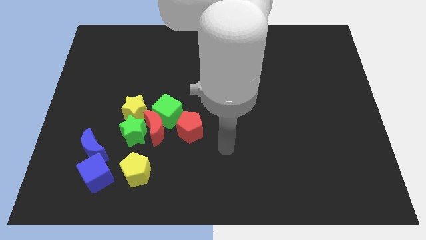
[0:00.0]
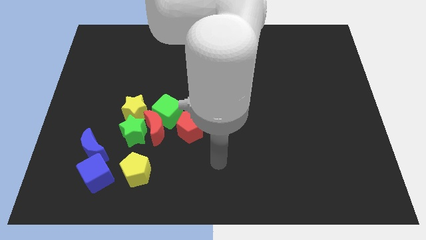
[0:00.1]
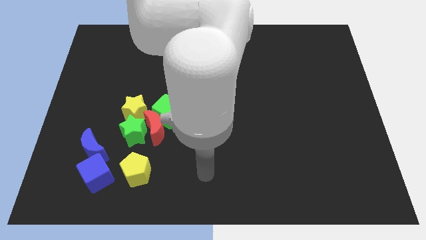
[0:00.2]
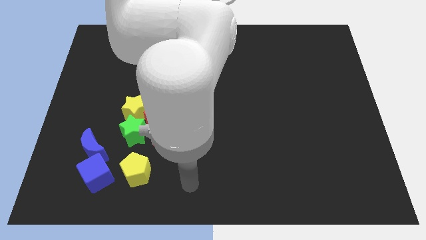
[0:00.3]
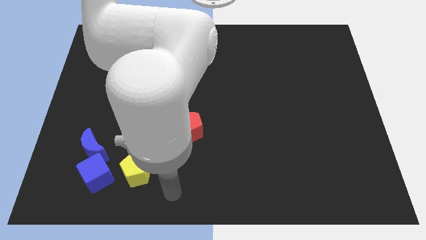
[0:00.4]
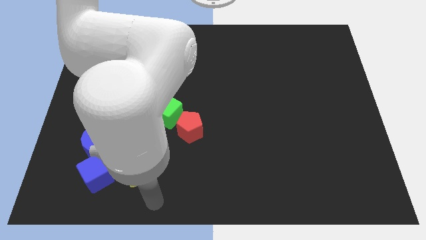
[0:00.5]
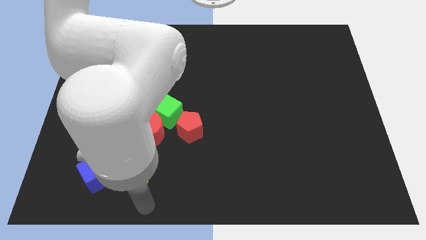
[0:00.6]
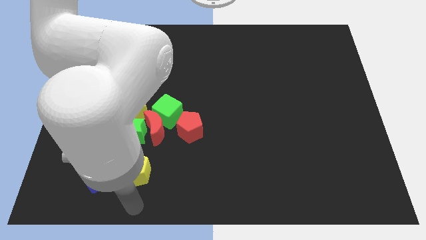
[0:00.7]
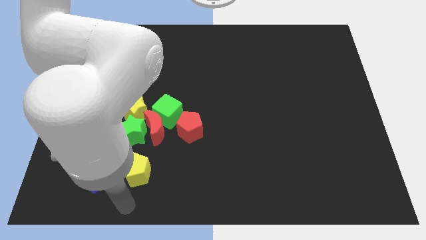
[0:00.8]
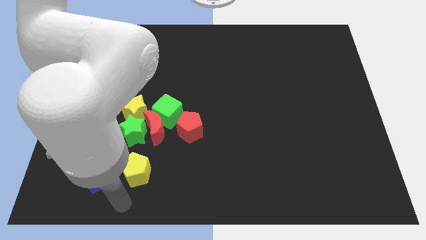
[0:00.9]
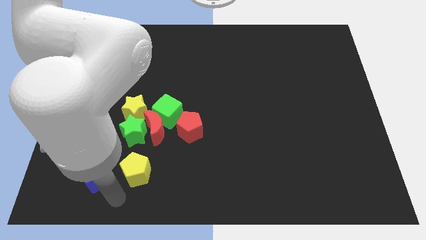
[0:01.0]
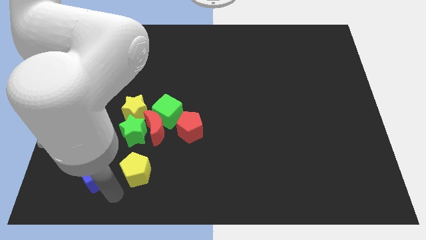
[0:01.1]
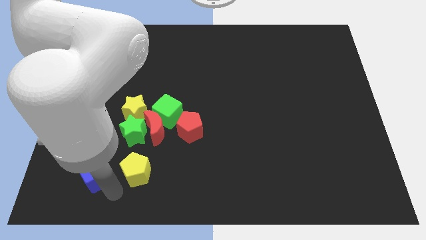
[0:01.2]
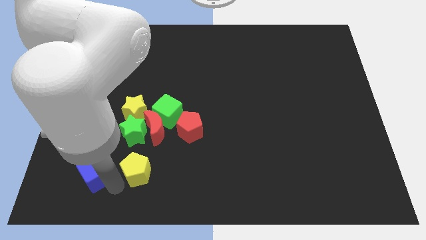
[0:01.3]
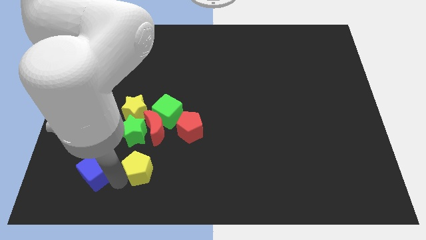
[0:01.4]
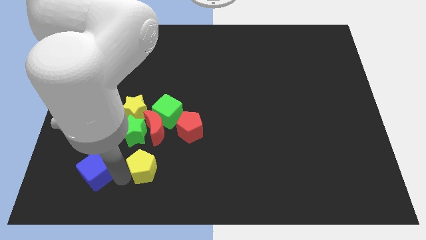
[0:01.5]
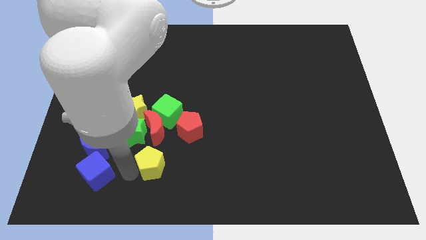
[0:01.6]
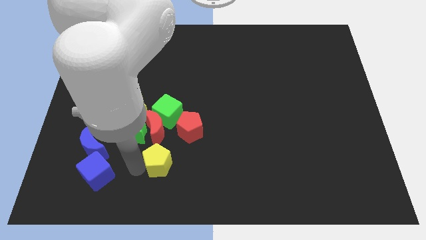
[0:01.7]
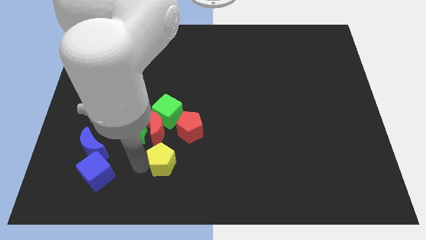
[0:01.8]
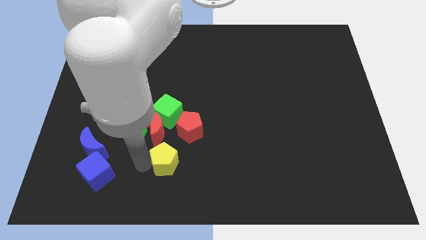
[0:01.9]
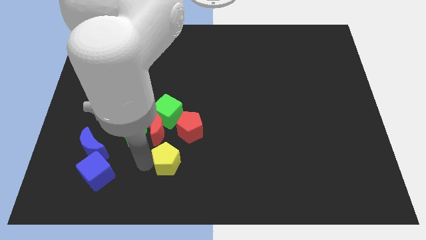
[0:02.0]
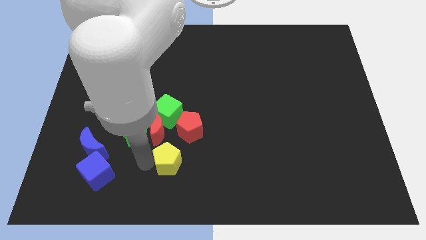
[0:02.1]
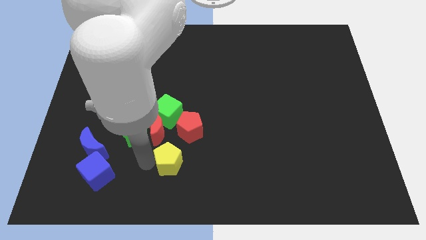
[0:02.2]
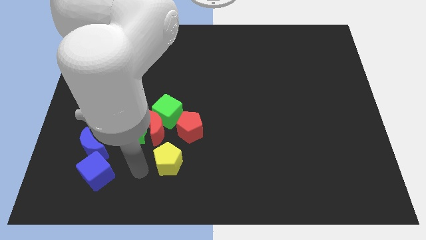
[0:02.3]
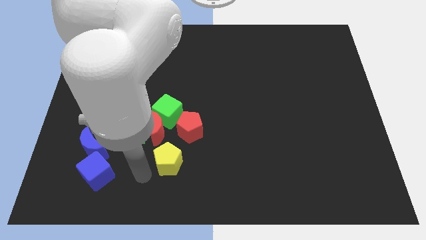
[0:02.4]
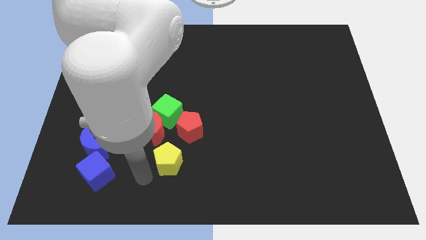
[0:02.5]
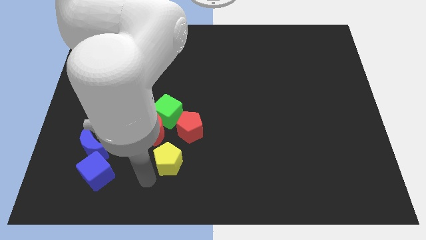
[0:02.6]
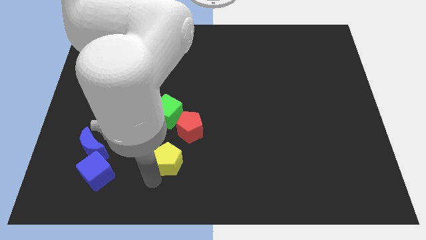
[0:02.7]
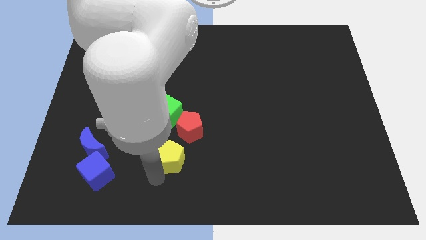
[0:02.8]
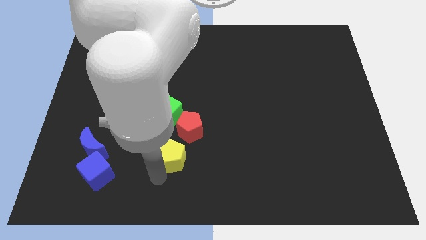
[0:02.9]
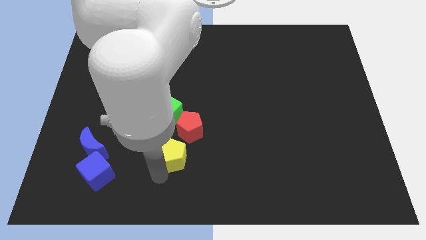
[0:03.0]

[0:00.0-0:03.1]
push the yellow pentagon to the bottom left side of the red pentagon

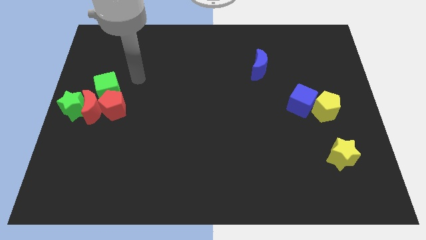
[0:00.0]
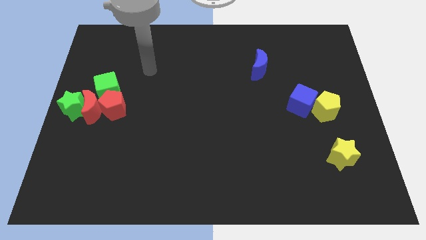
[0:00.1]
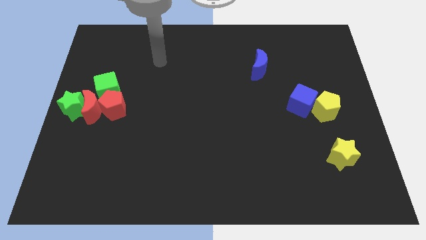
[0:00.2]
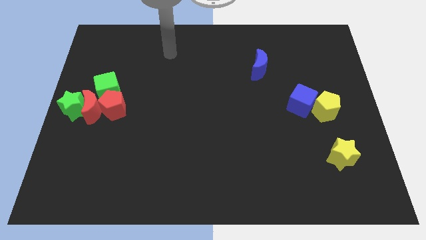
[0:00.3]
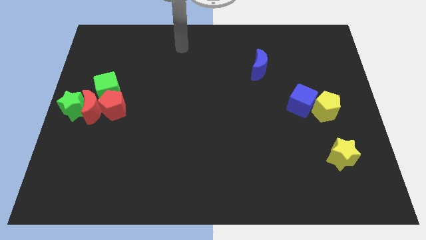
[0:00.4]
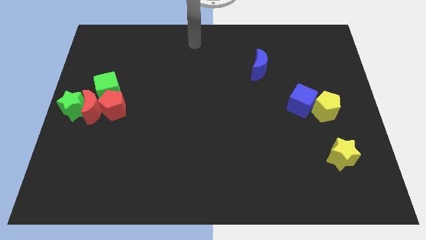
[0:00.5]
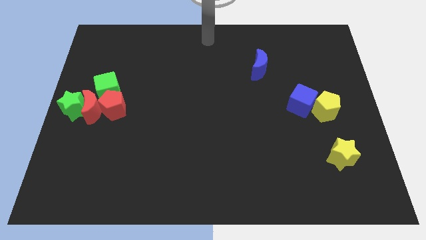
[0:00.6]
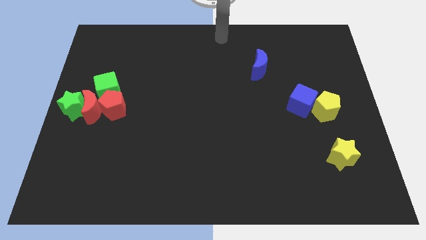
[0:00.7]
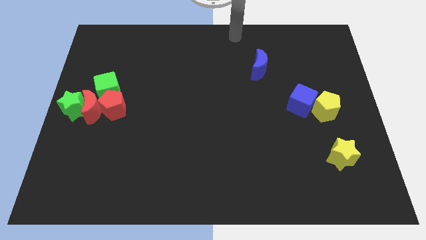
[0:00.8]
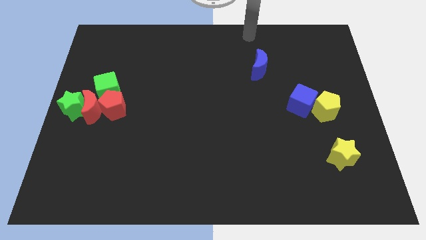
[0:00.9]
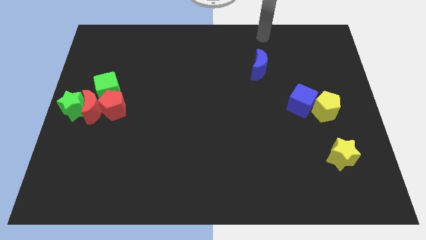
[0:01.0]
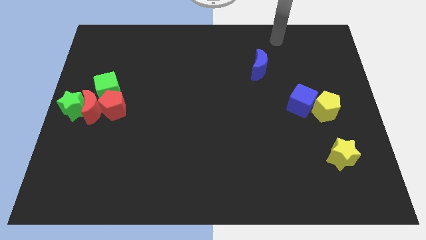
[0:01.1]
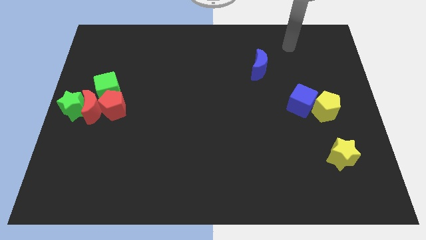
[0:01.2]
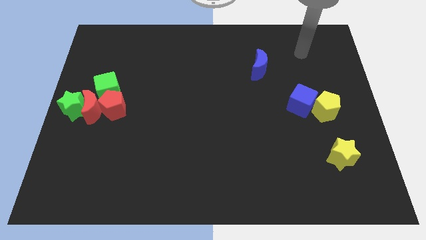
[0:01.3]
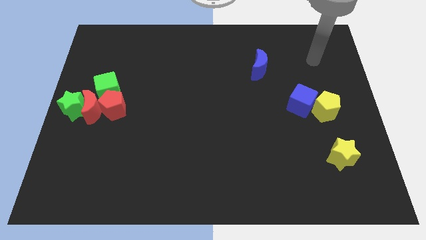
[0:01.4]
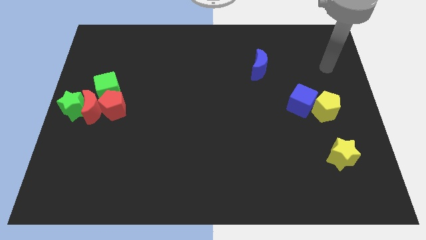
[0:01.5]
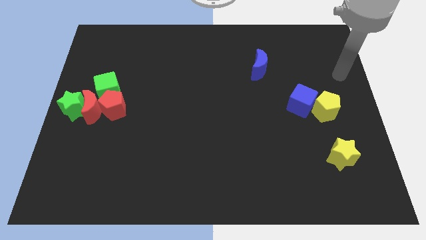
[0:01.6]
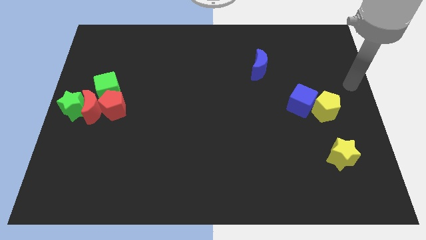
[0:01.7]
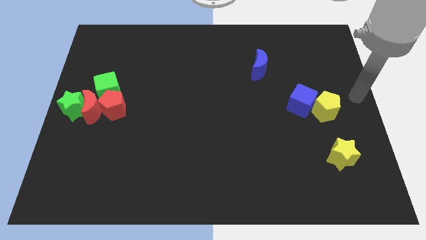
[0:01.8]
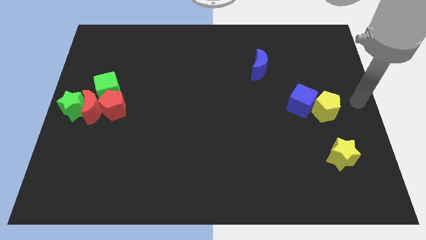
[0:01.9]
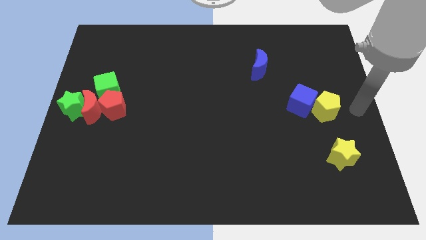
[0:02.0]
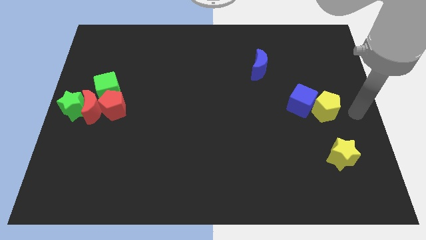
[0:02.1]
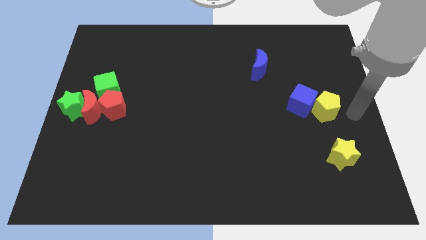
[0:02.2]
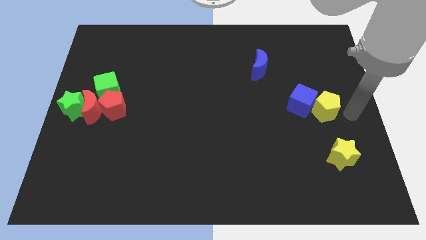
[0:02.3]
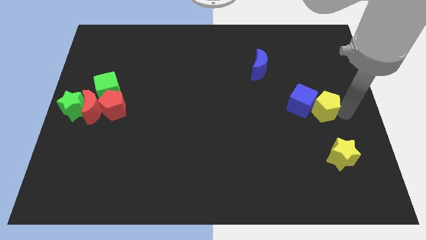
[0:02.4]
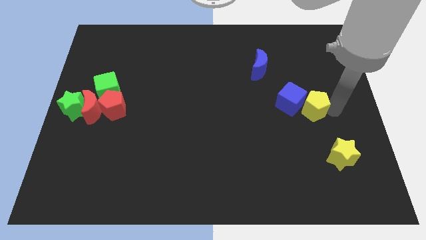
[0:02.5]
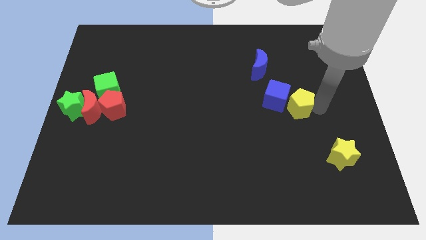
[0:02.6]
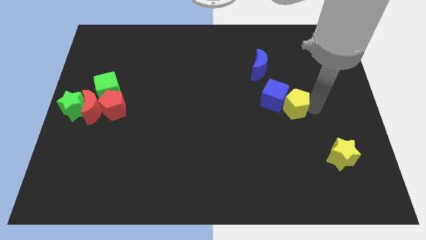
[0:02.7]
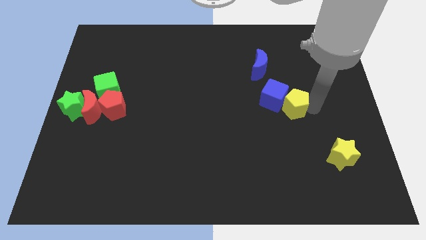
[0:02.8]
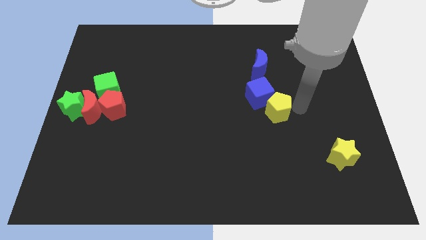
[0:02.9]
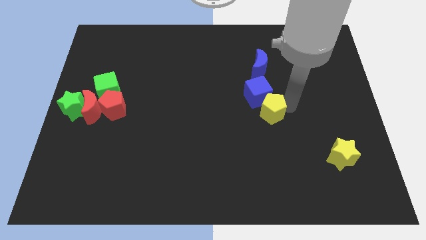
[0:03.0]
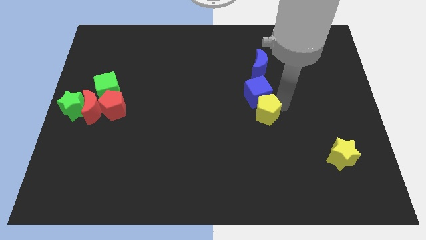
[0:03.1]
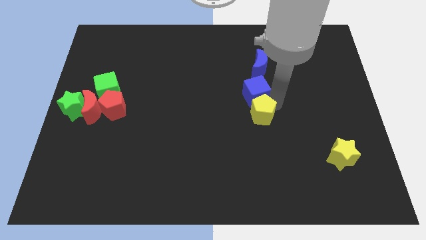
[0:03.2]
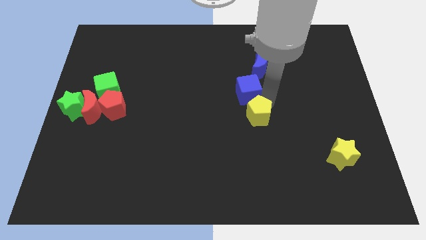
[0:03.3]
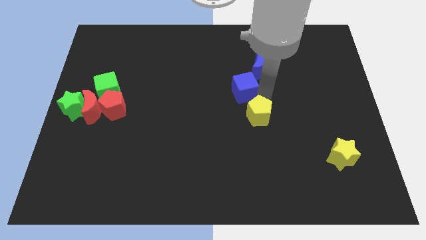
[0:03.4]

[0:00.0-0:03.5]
move the yellow pentagon along with the blue cube to the bottom of the blue crescent

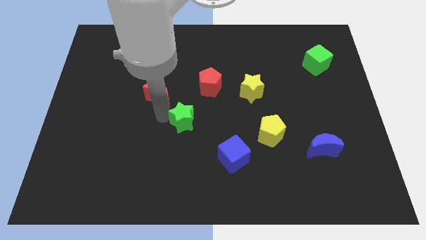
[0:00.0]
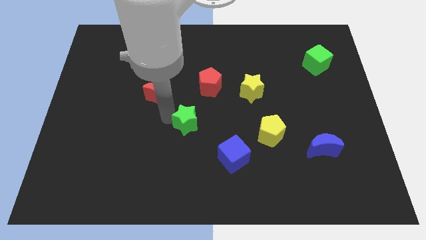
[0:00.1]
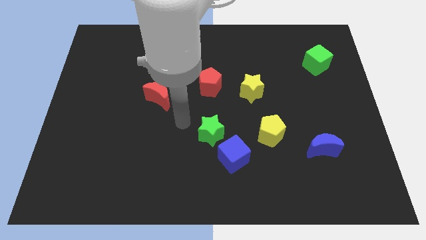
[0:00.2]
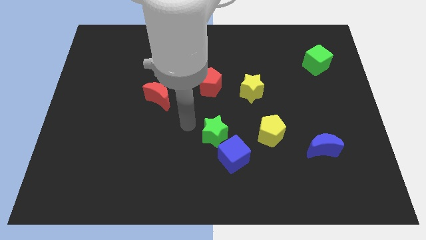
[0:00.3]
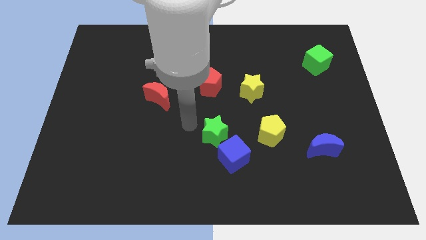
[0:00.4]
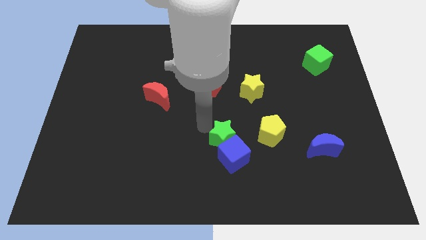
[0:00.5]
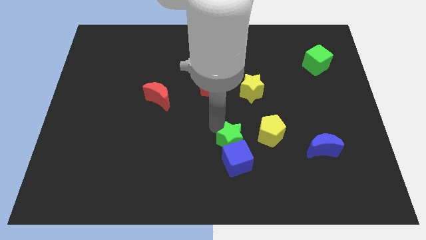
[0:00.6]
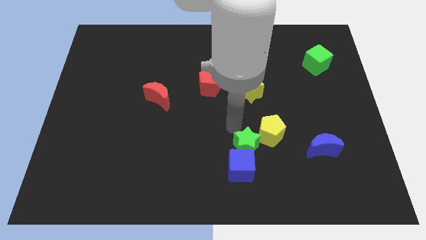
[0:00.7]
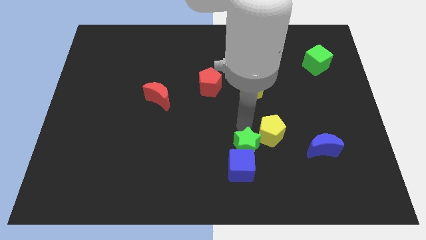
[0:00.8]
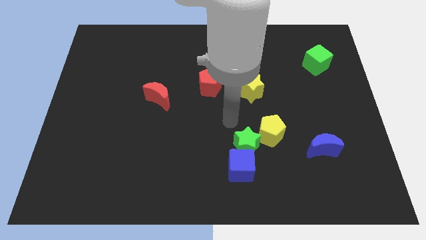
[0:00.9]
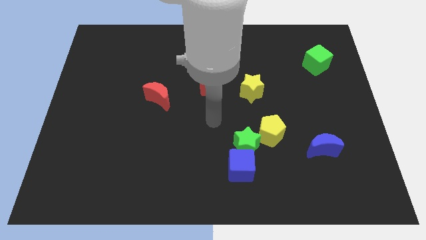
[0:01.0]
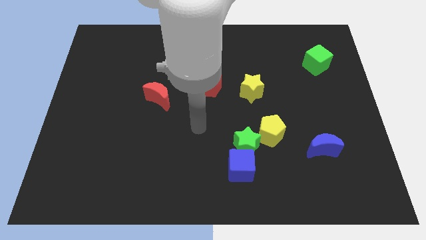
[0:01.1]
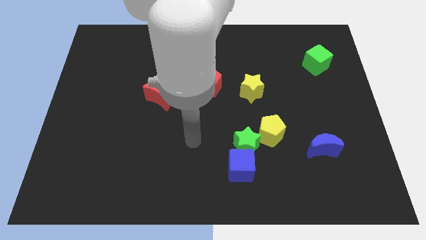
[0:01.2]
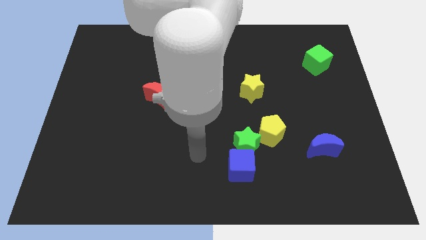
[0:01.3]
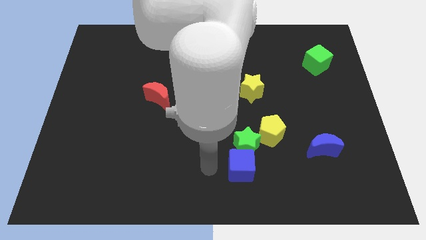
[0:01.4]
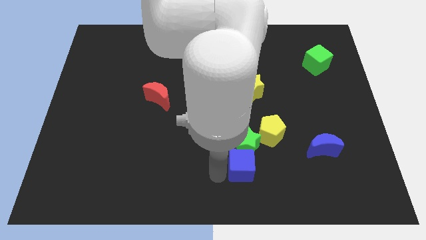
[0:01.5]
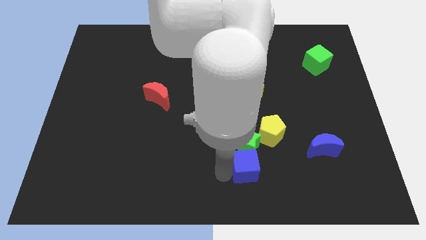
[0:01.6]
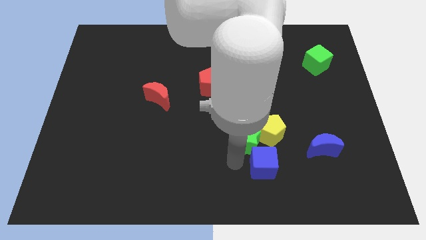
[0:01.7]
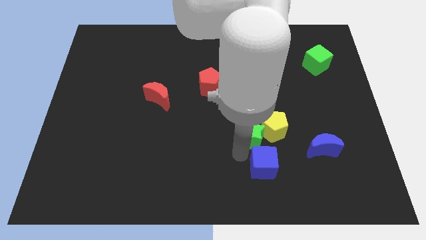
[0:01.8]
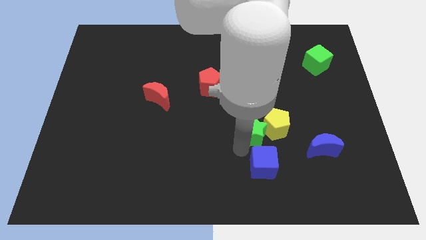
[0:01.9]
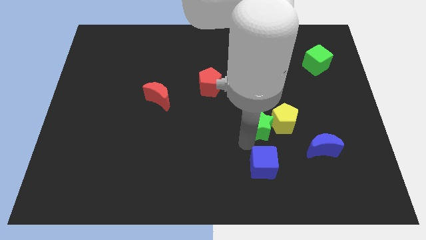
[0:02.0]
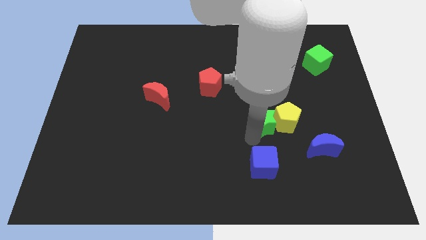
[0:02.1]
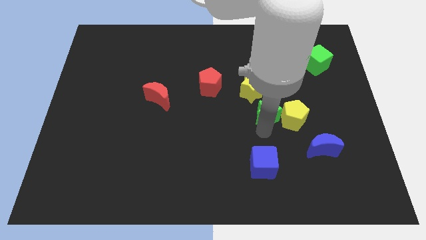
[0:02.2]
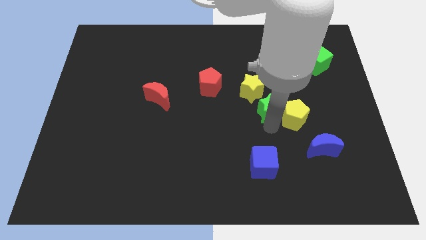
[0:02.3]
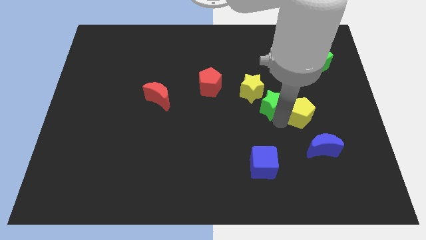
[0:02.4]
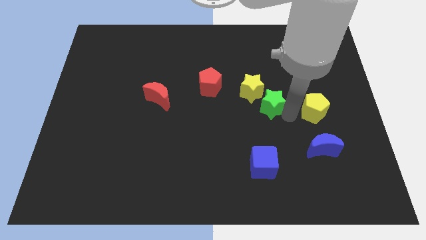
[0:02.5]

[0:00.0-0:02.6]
push the green star into yellow objects above blue objects
